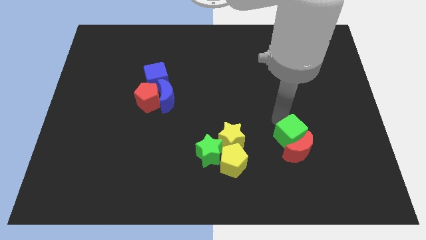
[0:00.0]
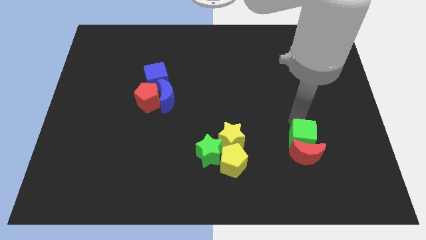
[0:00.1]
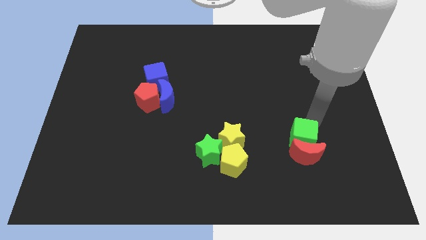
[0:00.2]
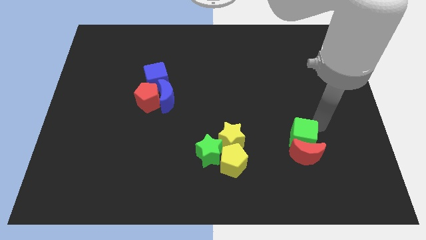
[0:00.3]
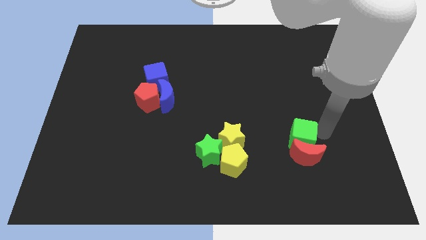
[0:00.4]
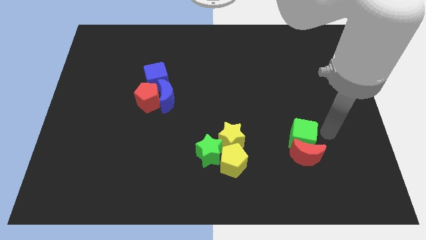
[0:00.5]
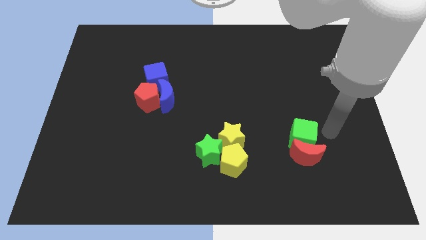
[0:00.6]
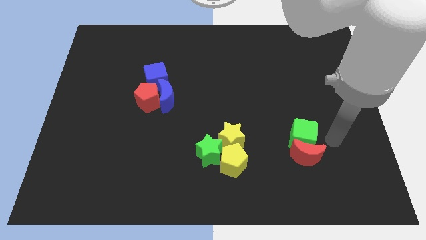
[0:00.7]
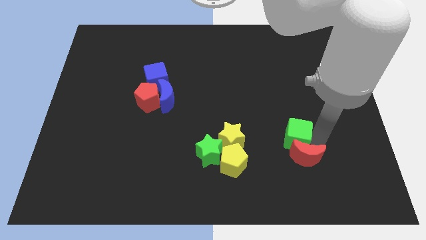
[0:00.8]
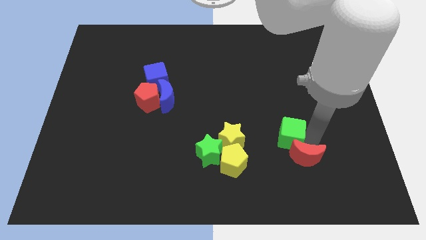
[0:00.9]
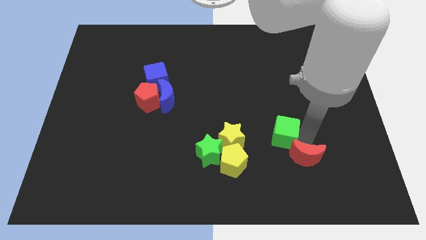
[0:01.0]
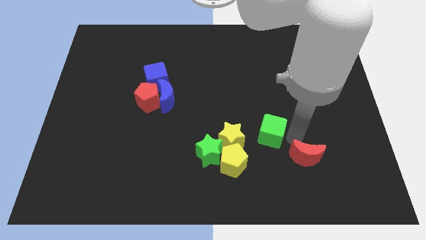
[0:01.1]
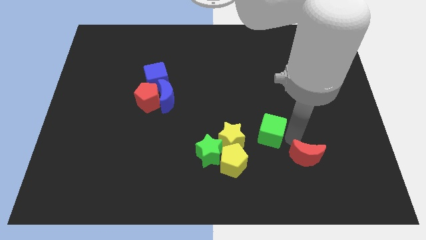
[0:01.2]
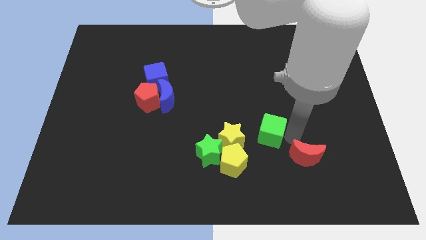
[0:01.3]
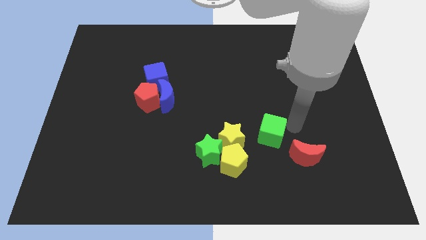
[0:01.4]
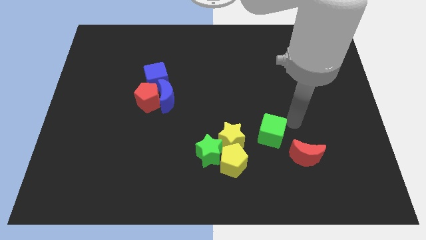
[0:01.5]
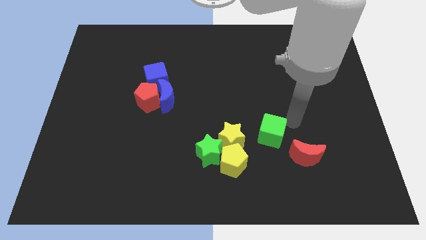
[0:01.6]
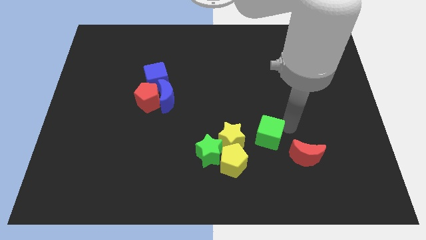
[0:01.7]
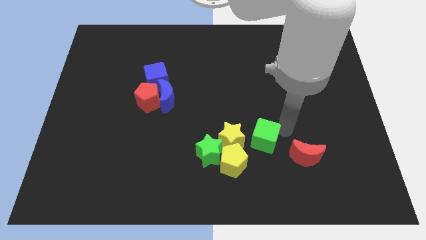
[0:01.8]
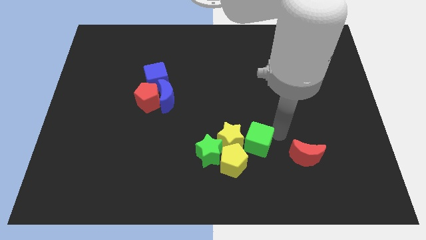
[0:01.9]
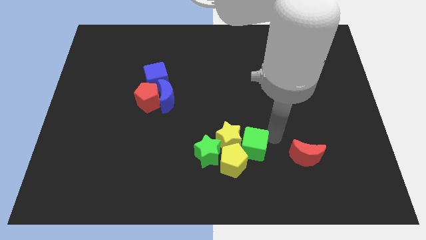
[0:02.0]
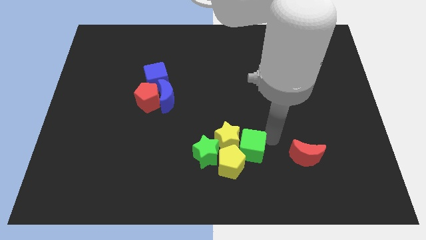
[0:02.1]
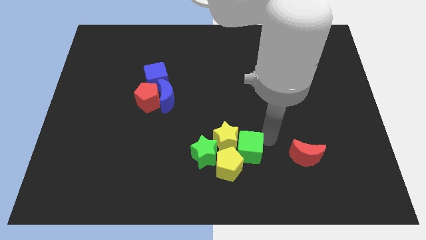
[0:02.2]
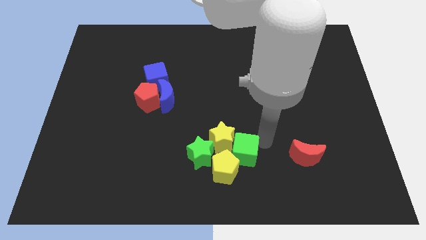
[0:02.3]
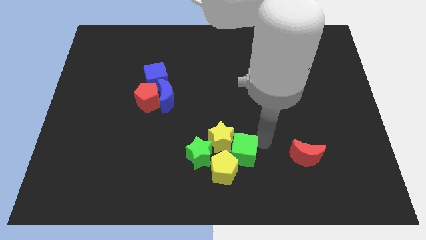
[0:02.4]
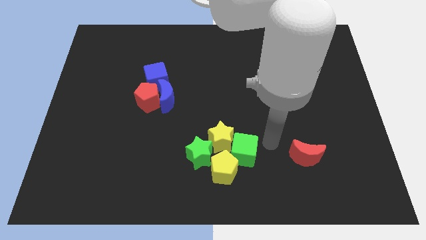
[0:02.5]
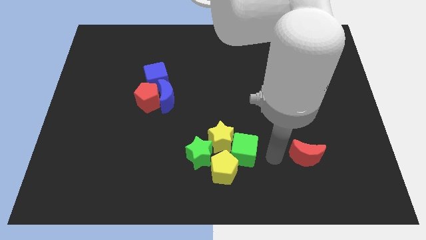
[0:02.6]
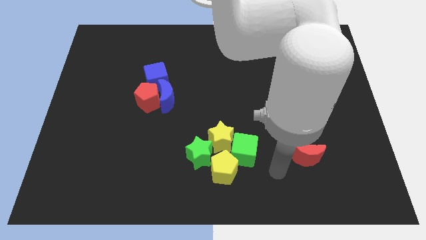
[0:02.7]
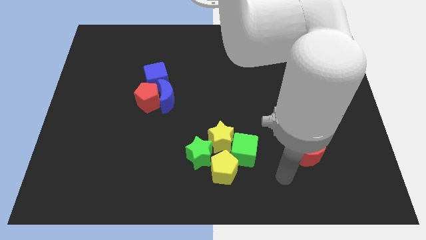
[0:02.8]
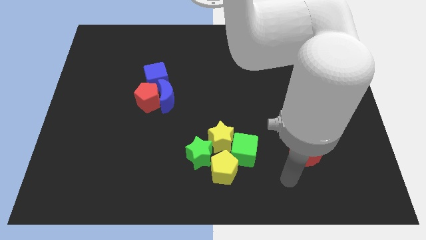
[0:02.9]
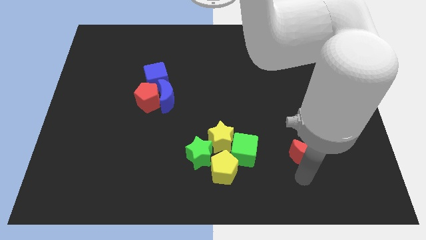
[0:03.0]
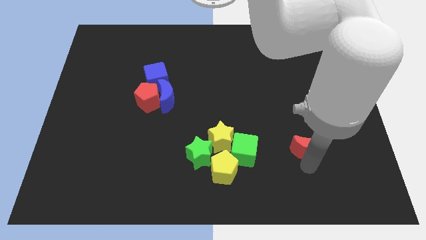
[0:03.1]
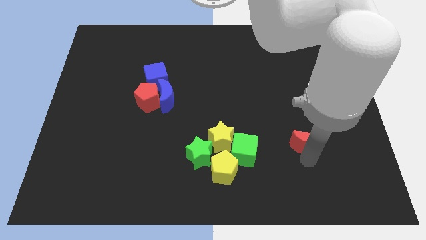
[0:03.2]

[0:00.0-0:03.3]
push green cube into group of blocks

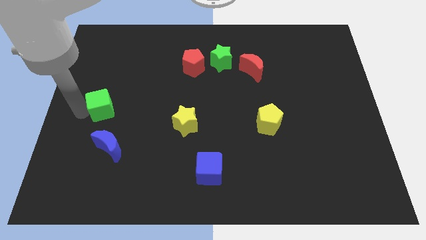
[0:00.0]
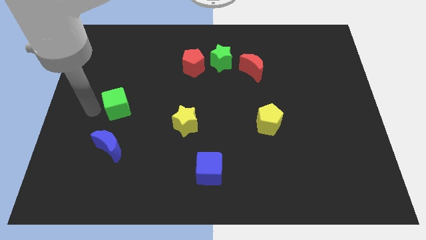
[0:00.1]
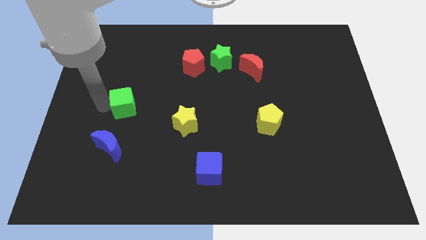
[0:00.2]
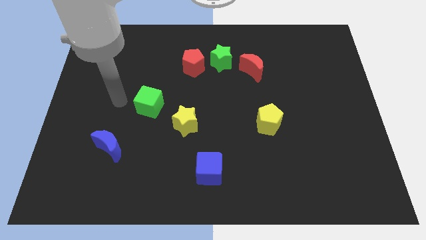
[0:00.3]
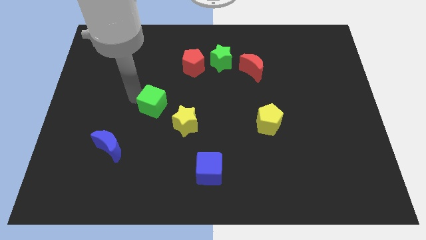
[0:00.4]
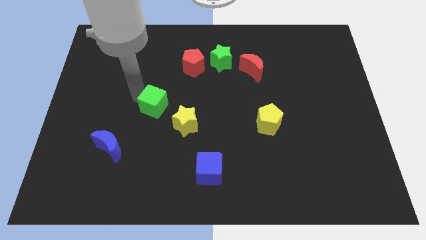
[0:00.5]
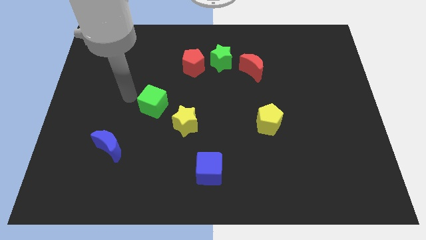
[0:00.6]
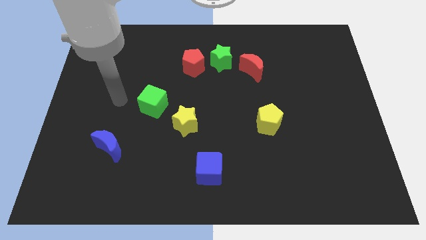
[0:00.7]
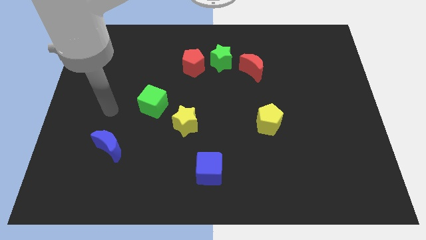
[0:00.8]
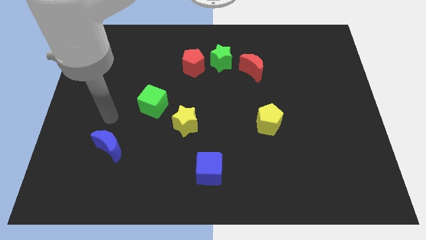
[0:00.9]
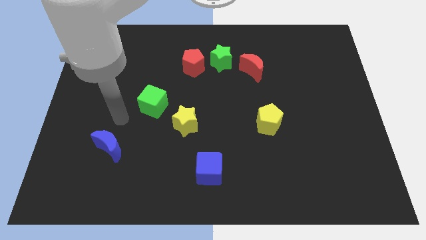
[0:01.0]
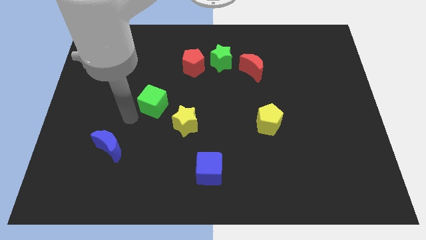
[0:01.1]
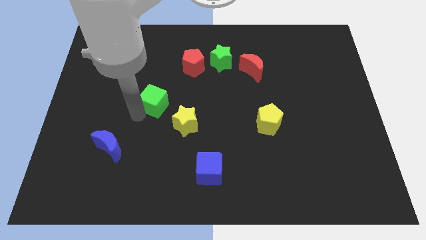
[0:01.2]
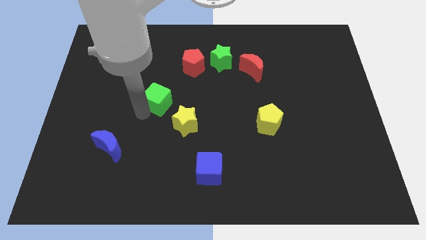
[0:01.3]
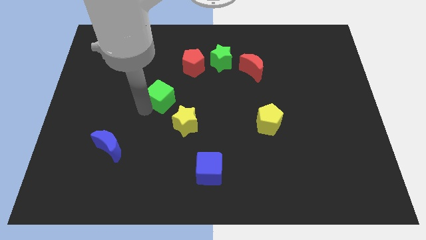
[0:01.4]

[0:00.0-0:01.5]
push the green cube to the right

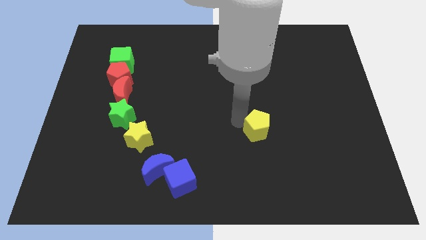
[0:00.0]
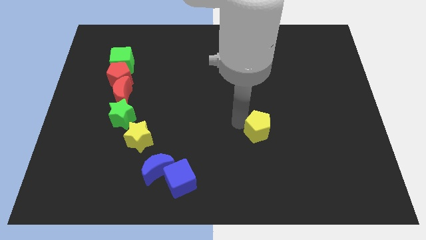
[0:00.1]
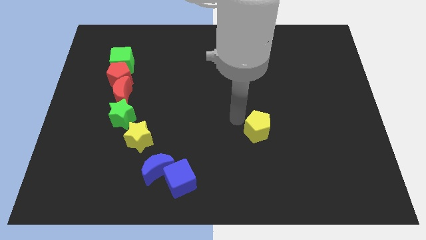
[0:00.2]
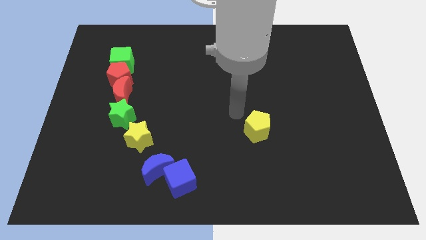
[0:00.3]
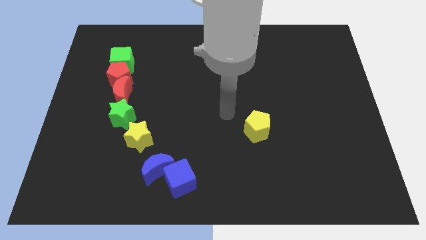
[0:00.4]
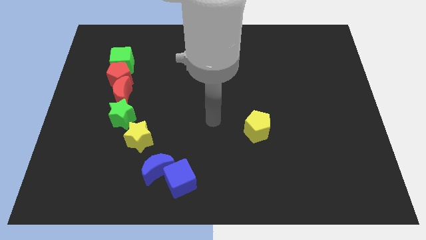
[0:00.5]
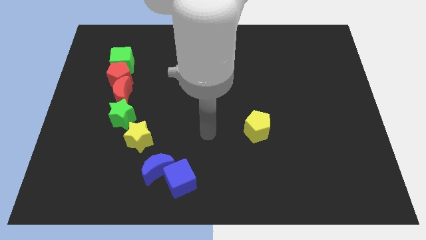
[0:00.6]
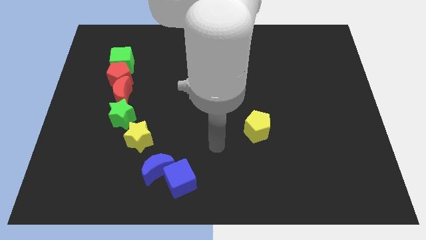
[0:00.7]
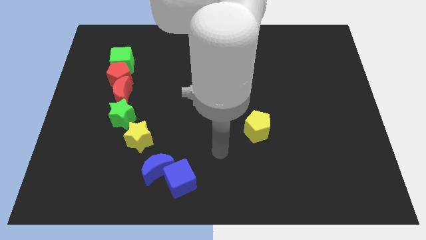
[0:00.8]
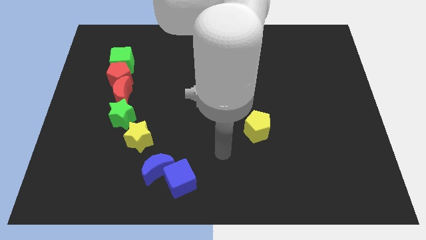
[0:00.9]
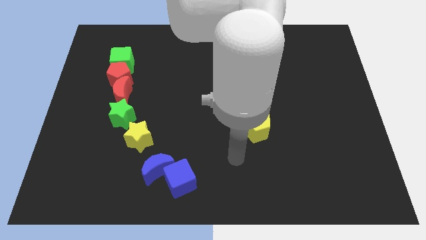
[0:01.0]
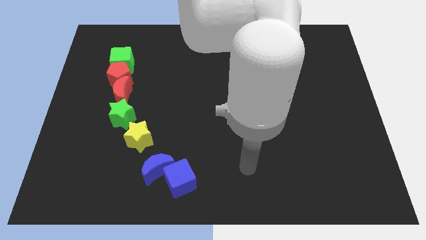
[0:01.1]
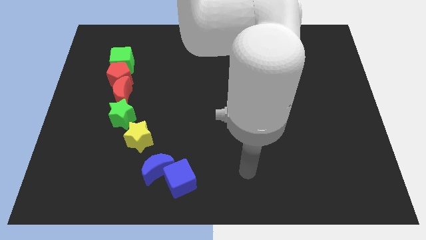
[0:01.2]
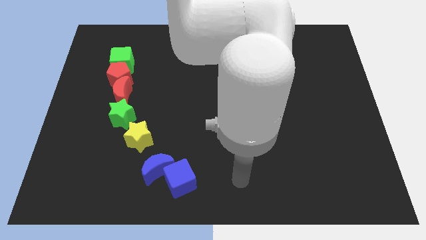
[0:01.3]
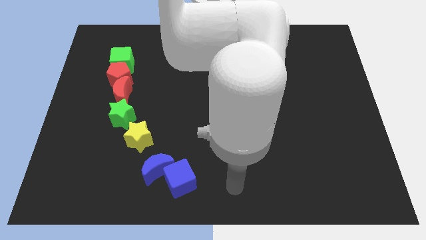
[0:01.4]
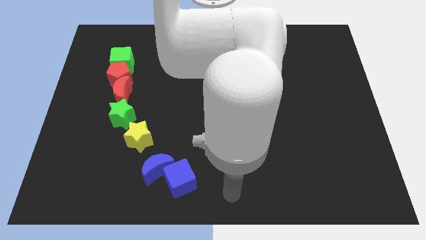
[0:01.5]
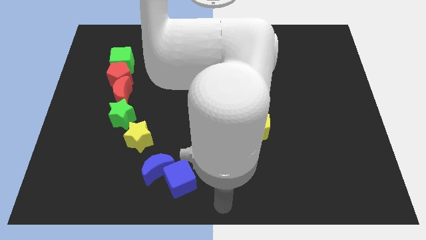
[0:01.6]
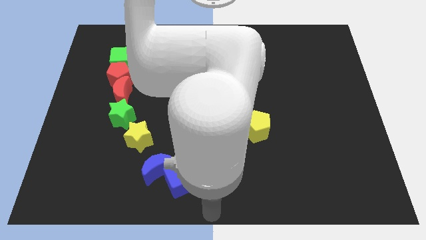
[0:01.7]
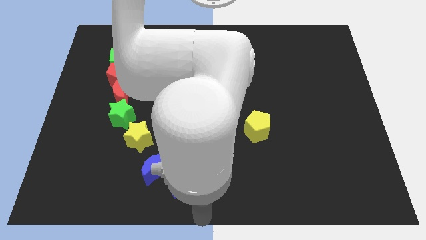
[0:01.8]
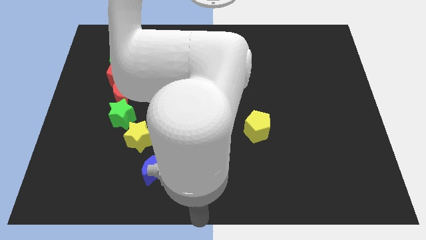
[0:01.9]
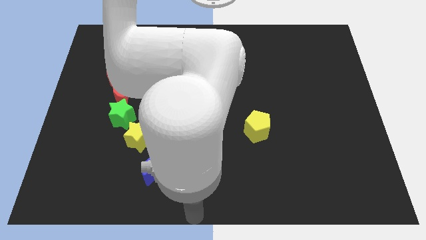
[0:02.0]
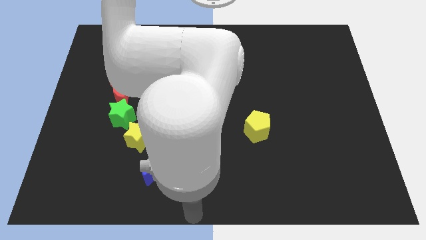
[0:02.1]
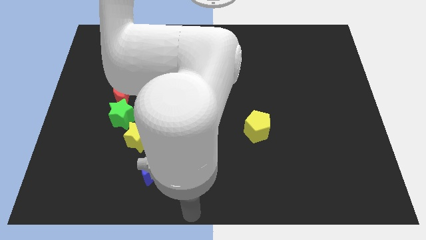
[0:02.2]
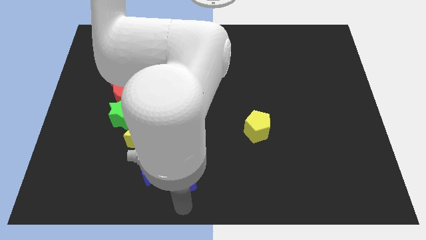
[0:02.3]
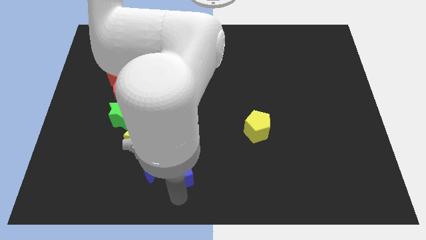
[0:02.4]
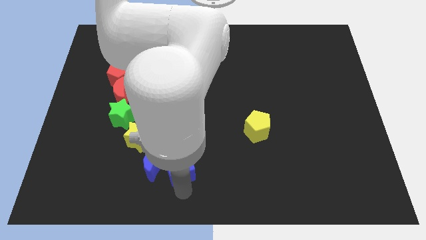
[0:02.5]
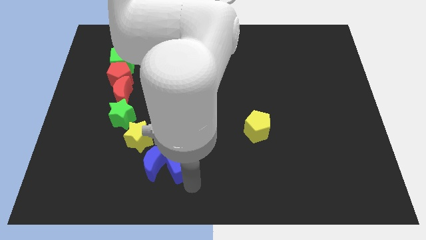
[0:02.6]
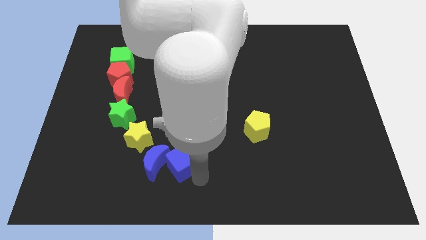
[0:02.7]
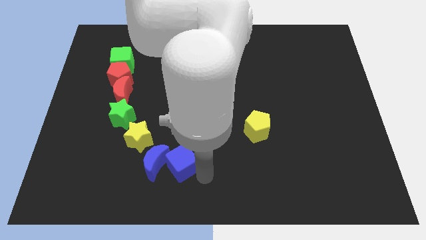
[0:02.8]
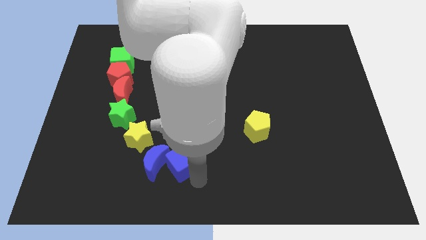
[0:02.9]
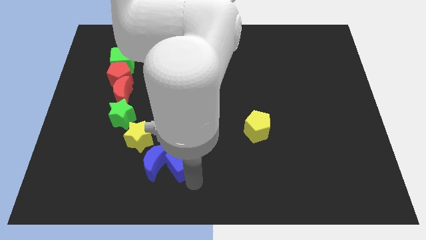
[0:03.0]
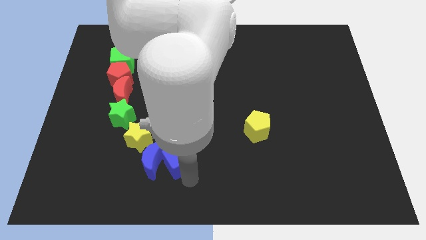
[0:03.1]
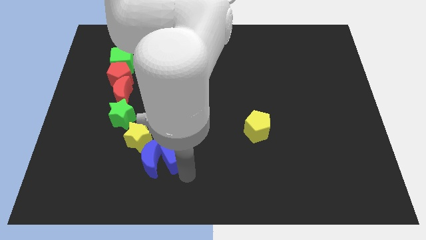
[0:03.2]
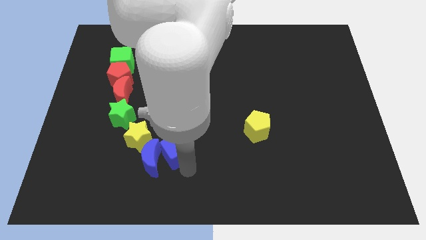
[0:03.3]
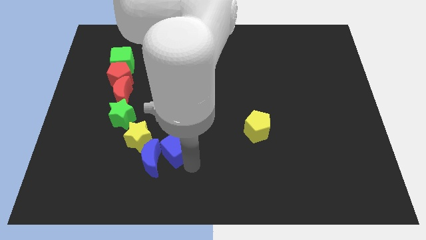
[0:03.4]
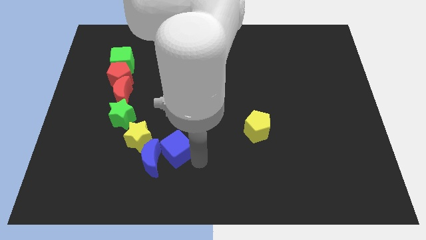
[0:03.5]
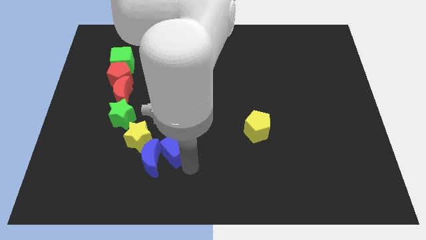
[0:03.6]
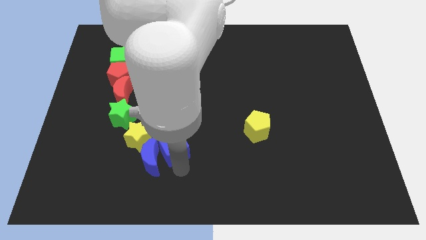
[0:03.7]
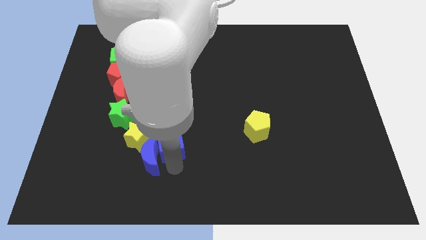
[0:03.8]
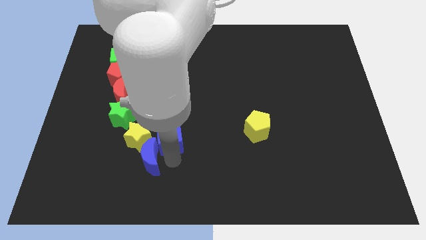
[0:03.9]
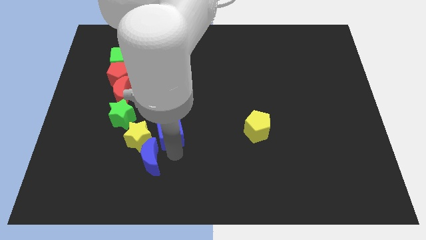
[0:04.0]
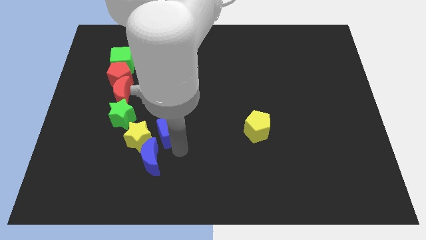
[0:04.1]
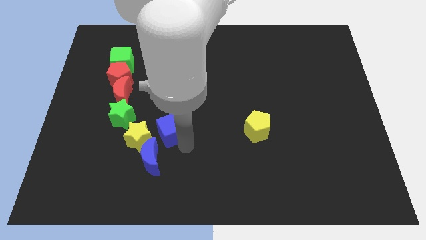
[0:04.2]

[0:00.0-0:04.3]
move the blue cube to the right of the yellow star
